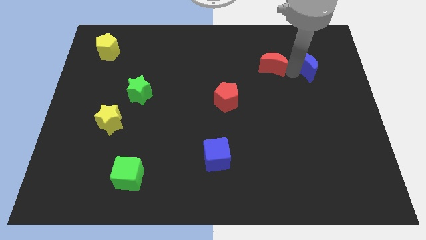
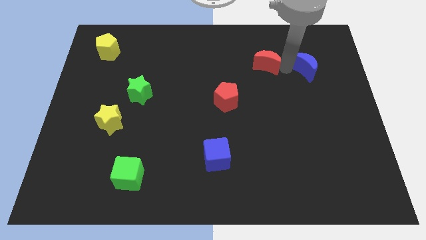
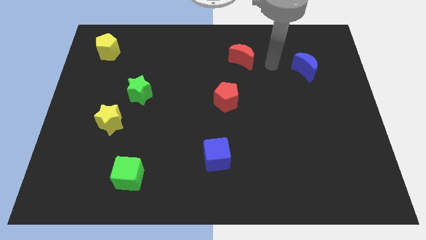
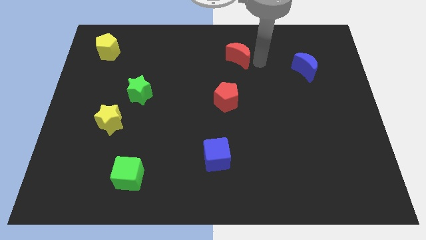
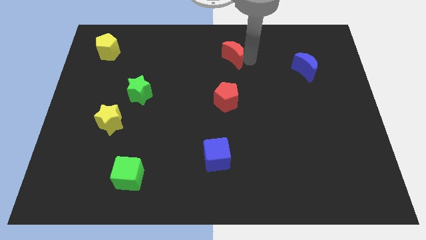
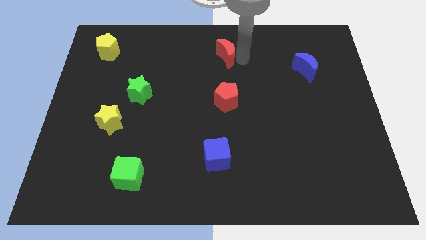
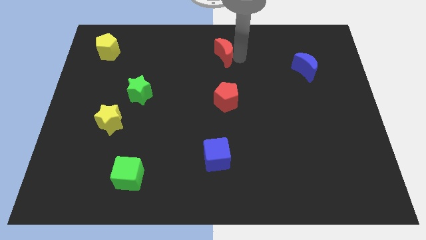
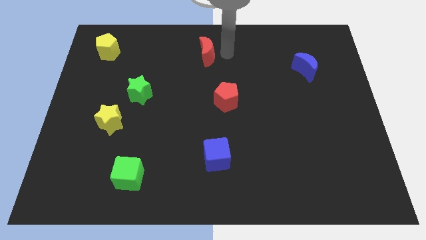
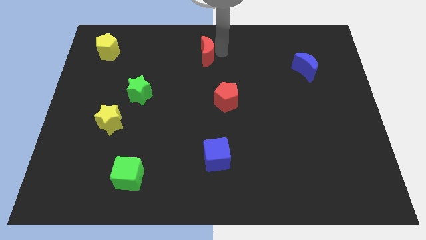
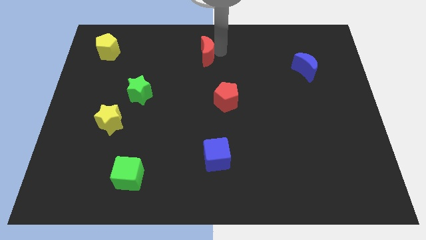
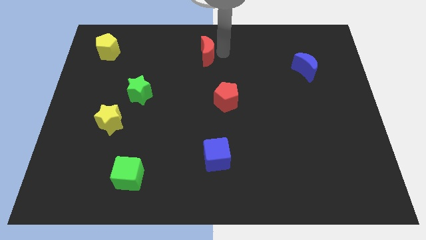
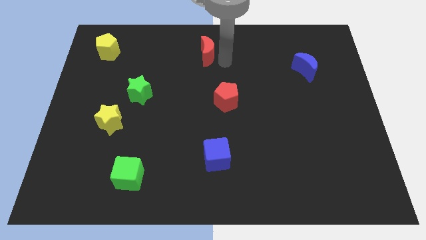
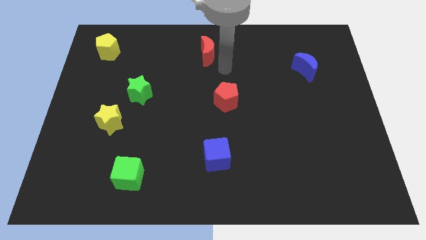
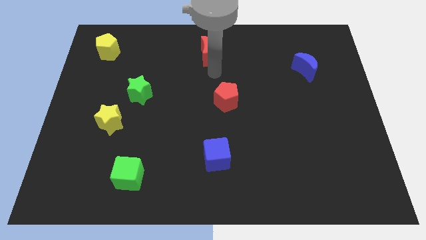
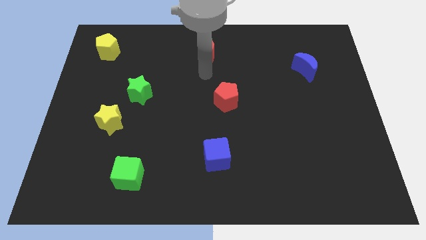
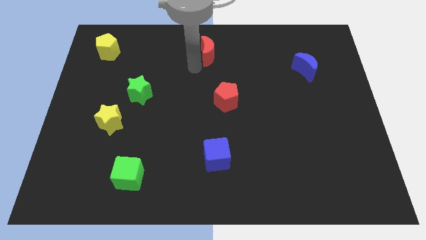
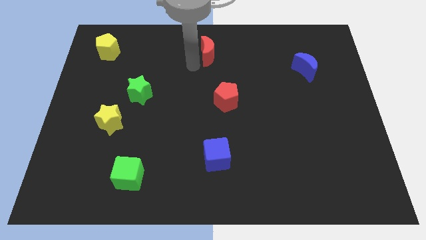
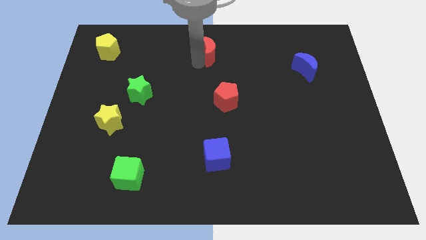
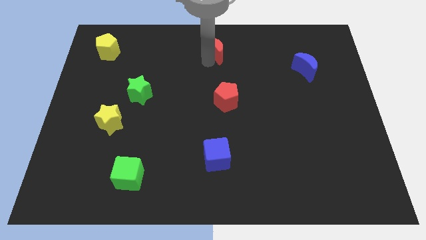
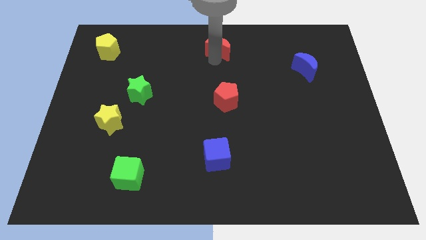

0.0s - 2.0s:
move the red crescent towards the top center of the board

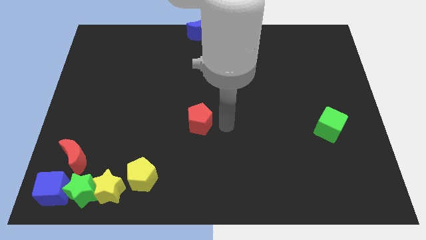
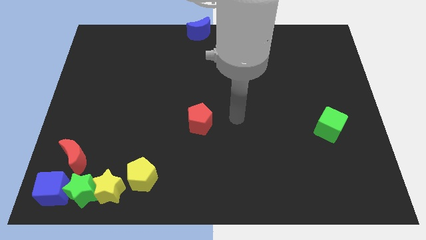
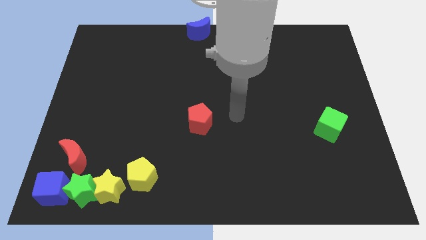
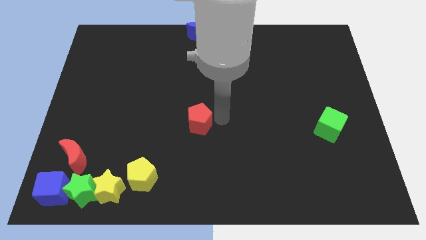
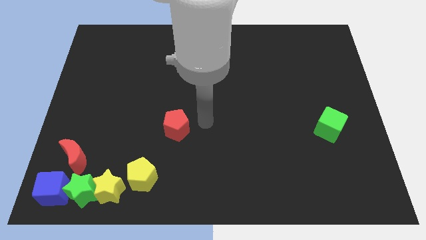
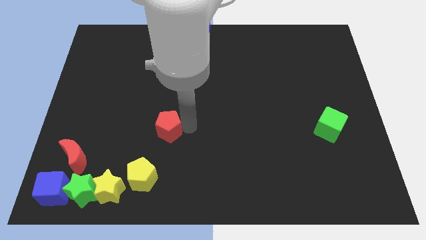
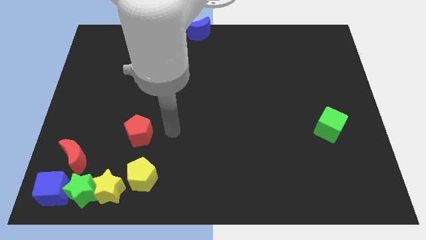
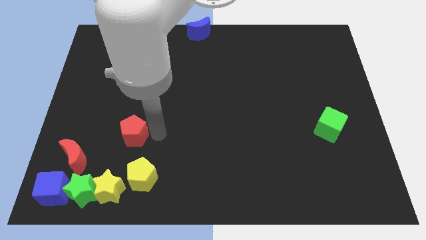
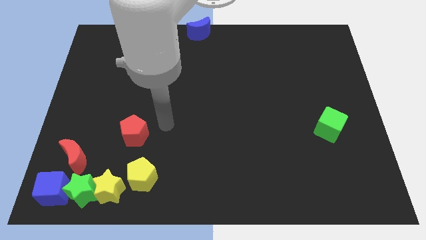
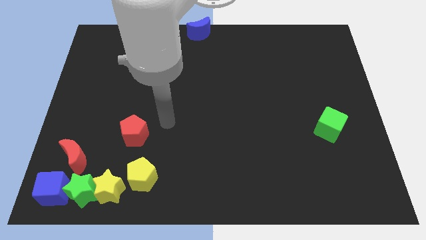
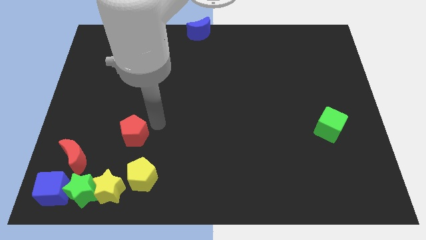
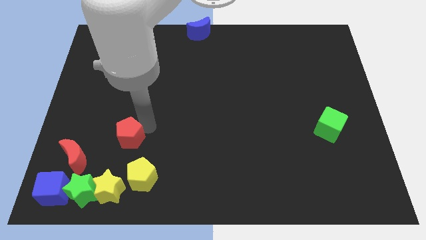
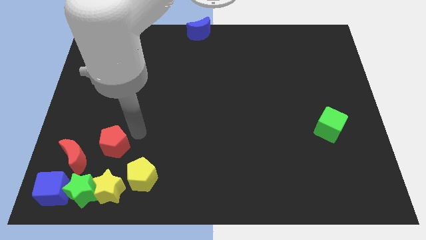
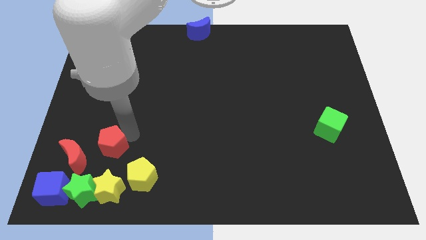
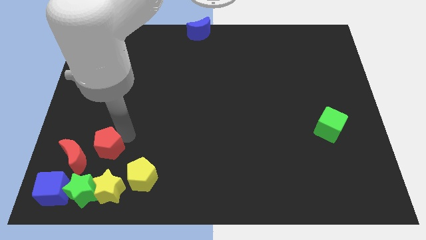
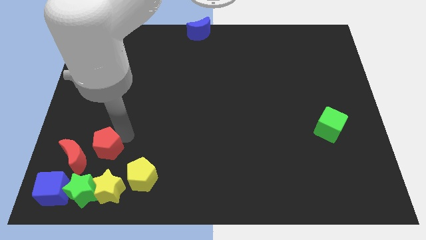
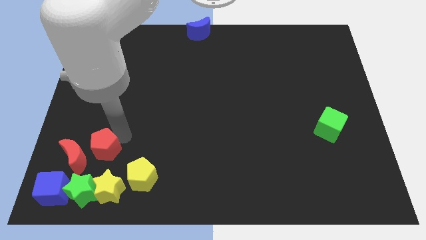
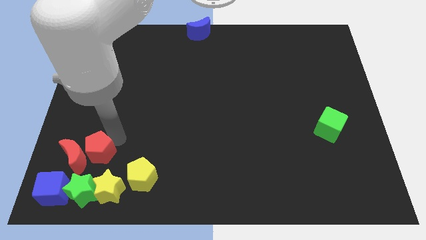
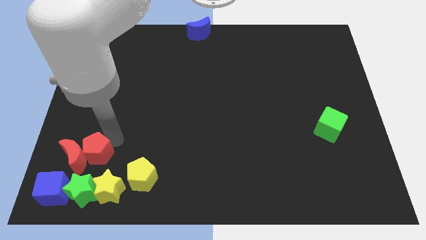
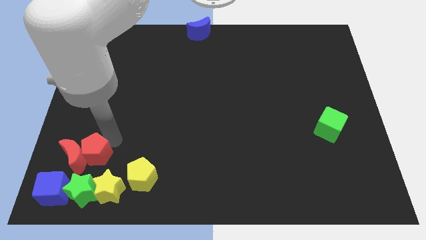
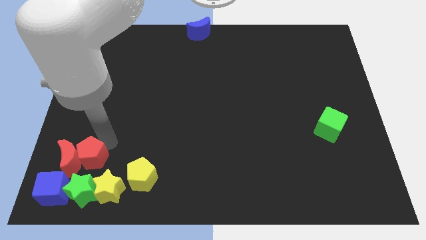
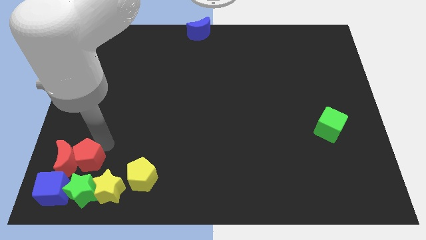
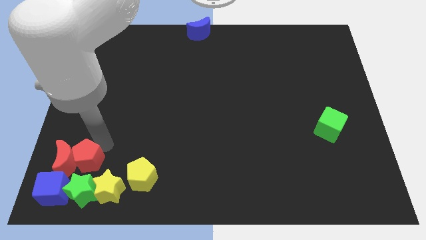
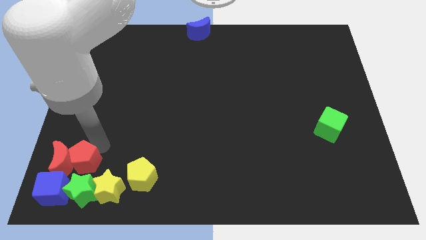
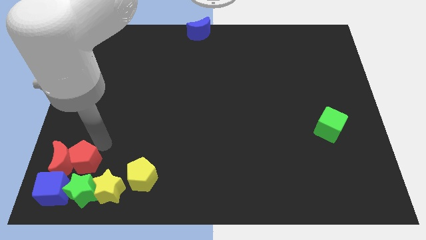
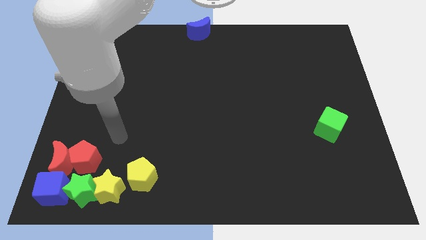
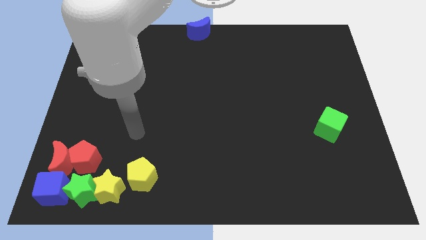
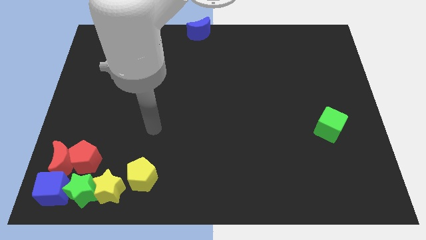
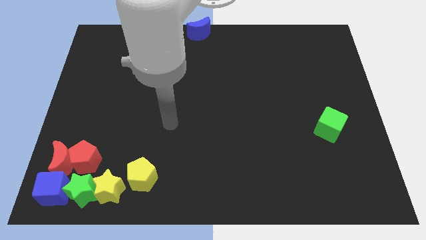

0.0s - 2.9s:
push the red pentagon to the top of the green star

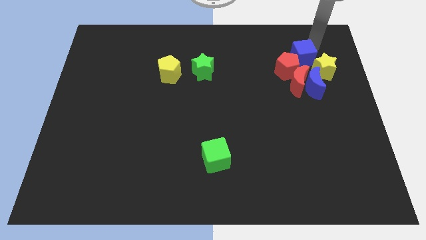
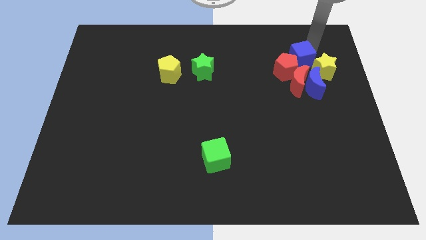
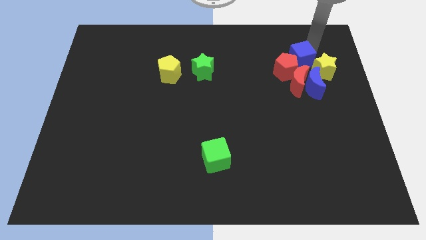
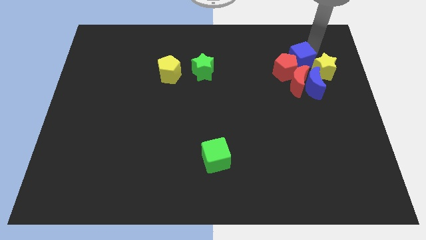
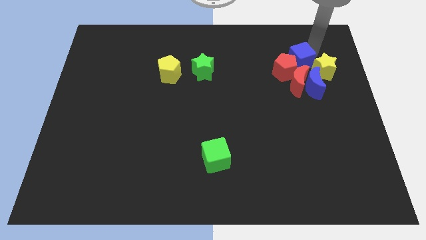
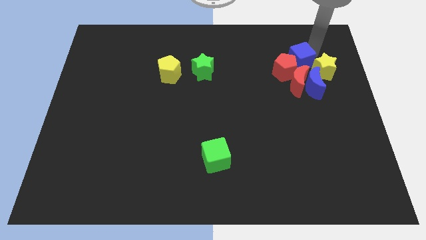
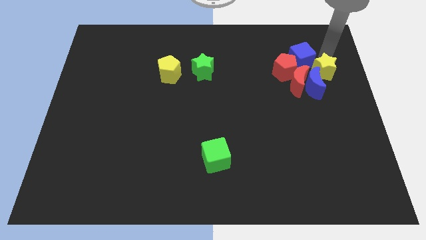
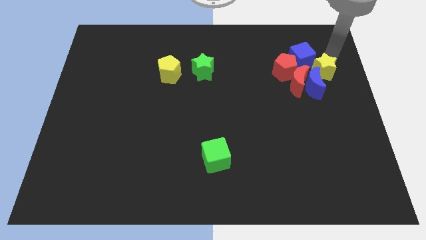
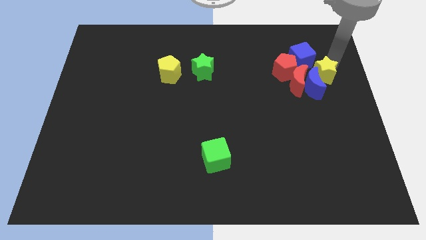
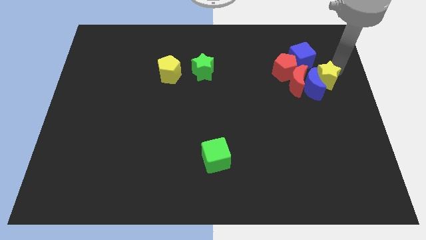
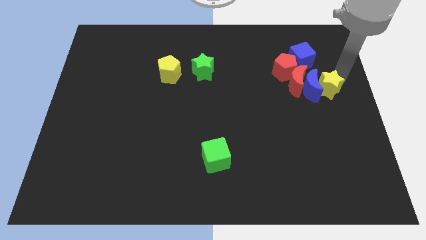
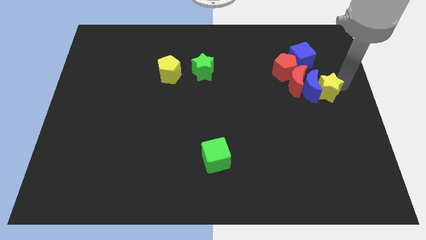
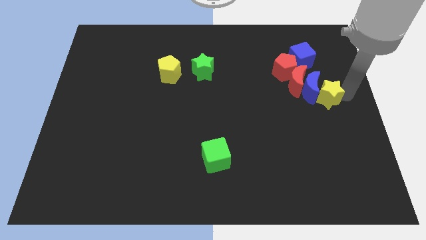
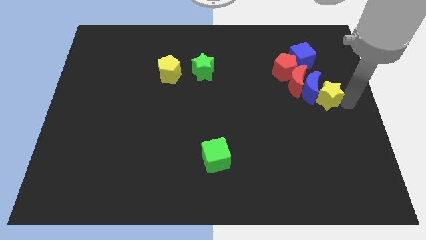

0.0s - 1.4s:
drag the yellow star slightly downwards

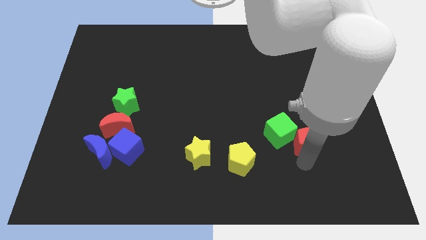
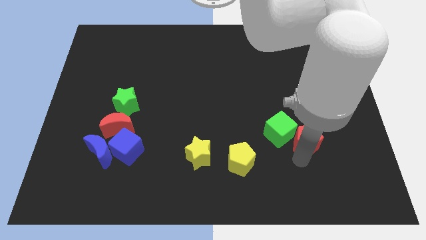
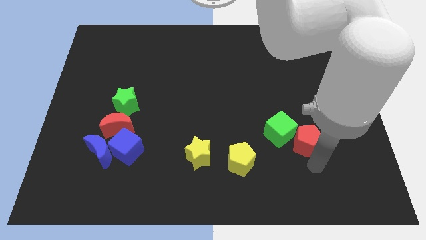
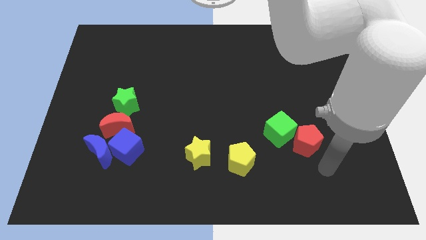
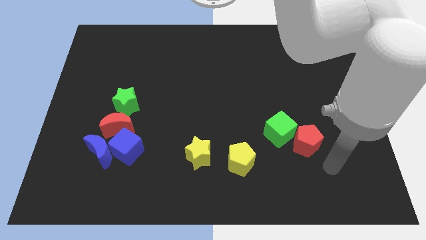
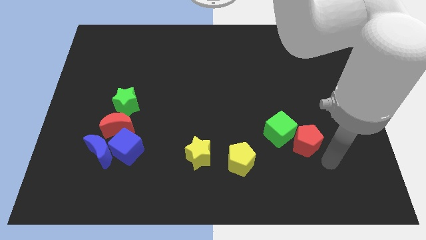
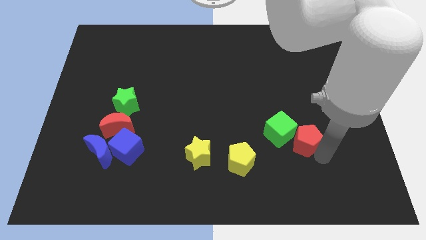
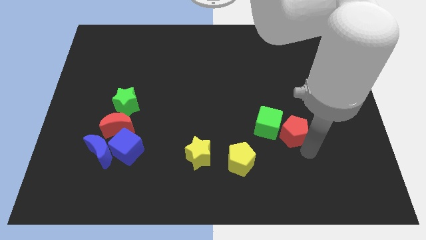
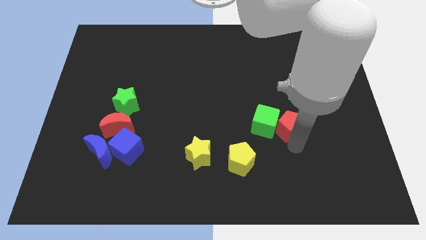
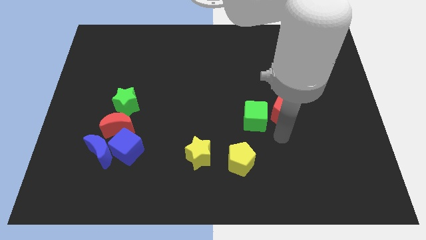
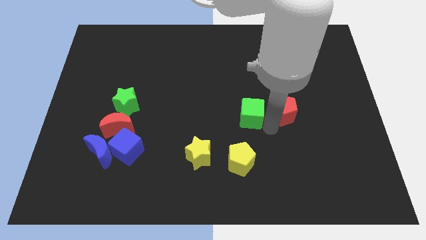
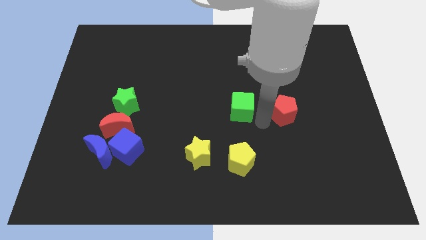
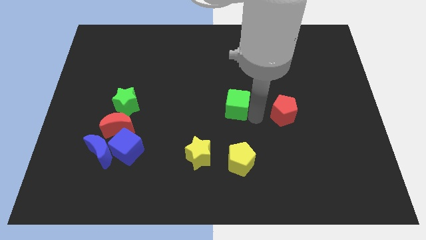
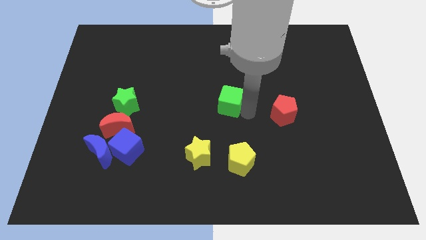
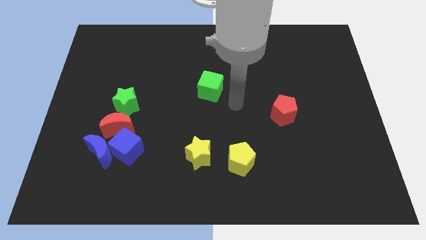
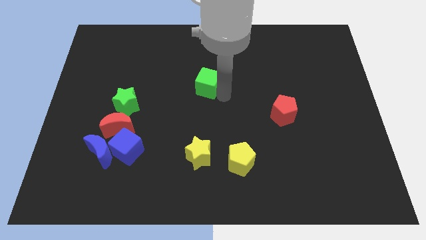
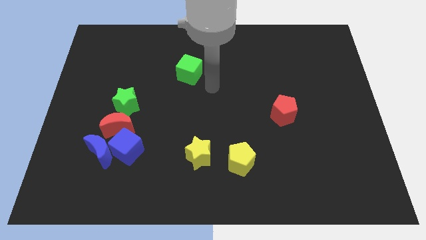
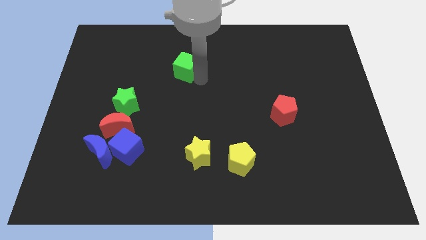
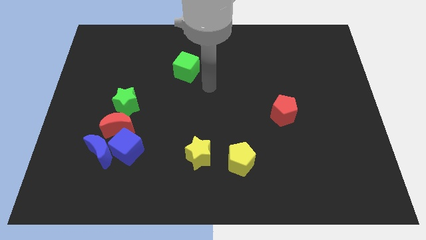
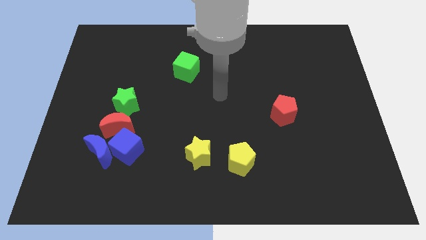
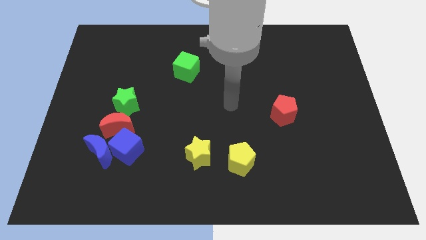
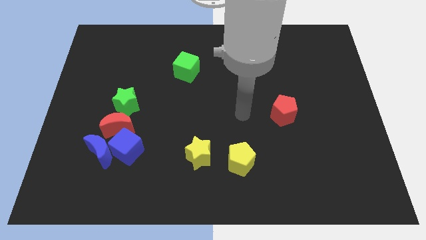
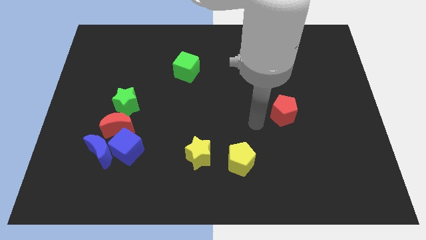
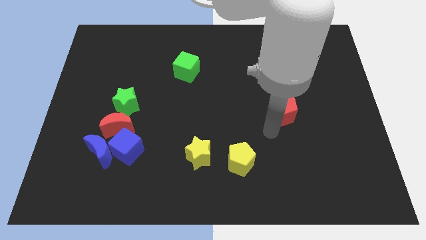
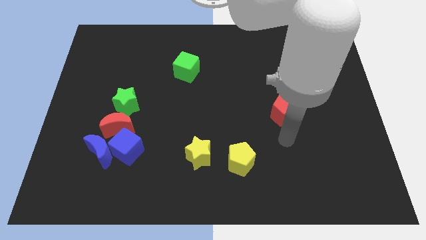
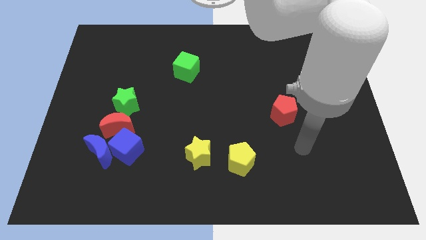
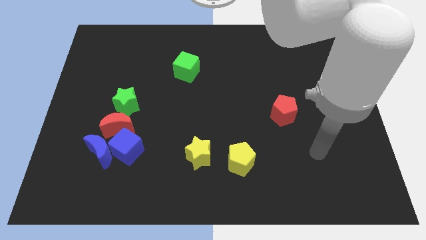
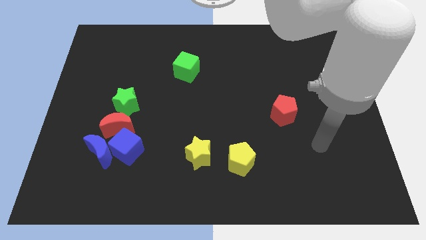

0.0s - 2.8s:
push the green cube away from the red pentagon
